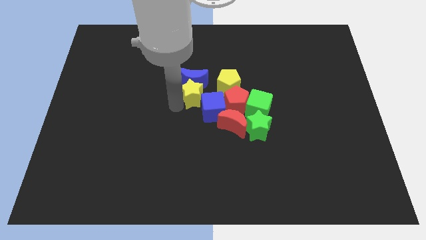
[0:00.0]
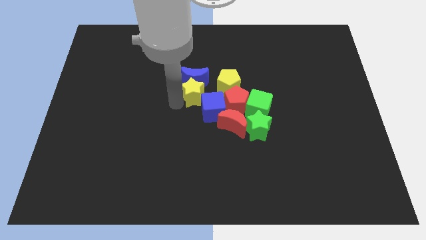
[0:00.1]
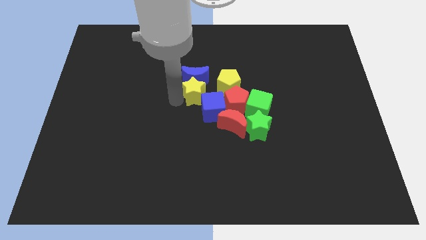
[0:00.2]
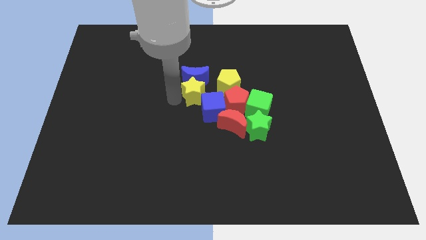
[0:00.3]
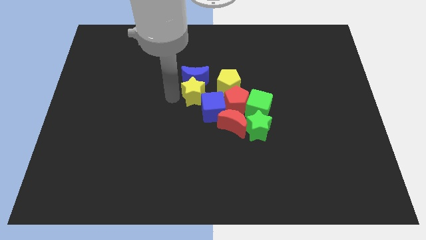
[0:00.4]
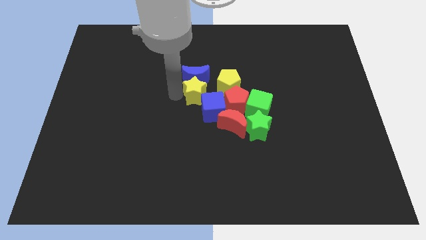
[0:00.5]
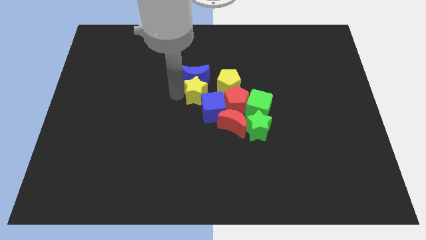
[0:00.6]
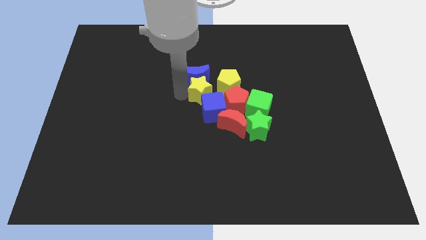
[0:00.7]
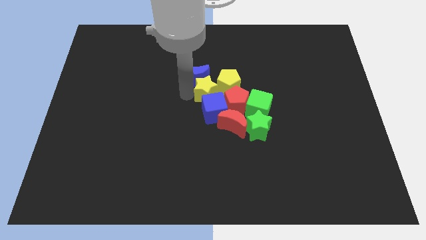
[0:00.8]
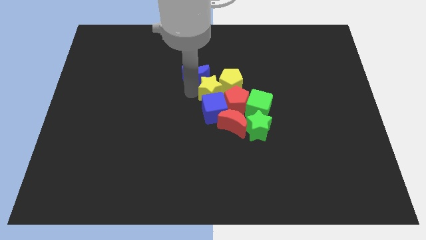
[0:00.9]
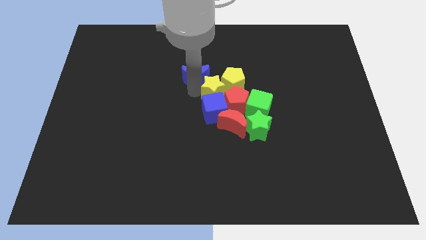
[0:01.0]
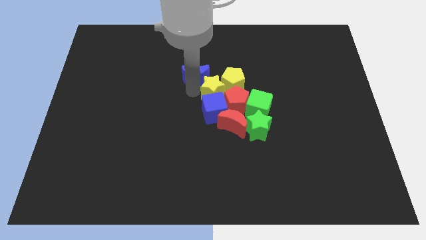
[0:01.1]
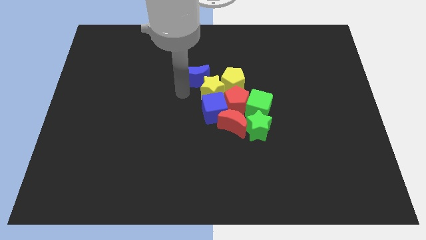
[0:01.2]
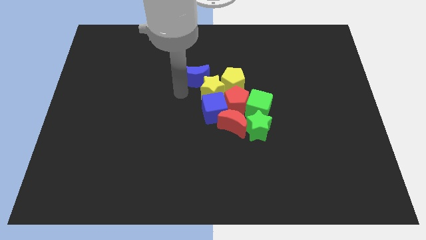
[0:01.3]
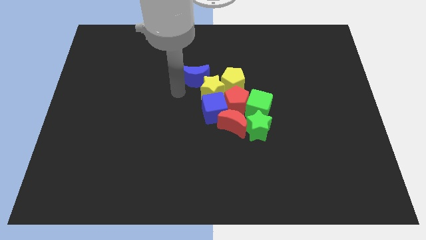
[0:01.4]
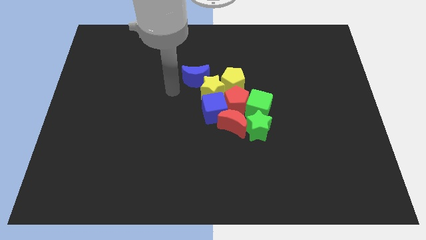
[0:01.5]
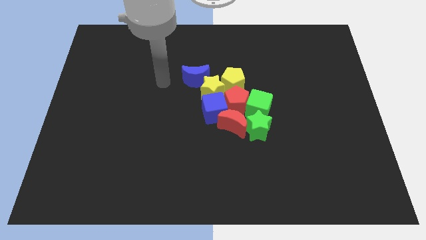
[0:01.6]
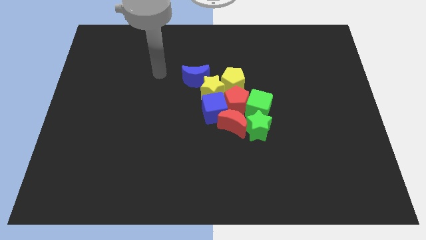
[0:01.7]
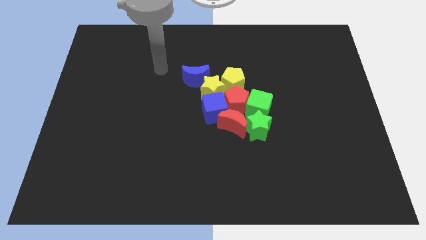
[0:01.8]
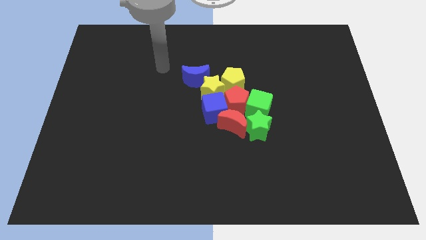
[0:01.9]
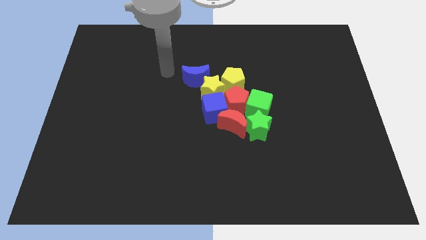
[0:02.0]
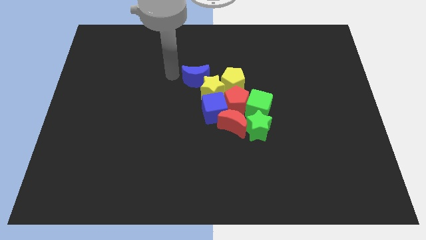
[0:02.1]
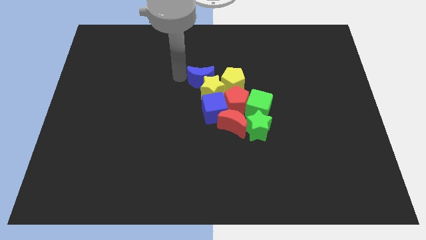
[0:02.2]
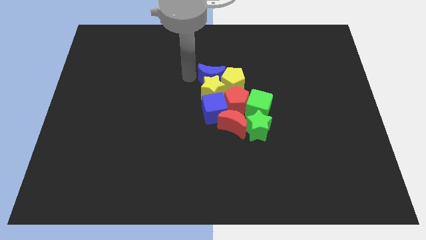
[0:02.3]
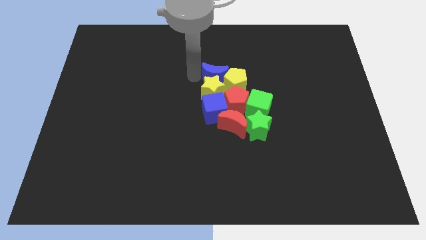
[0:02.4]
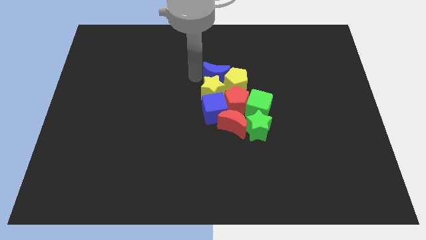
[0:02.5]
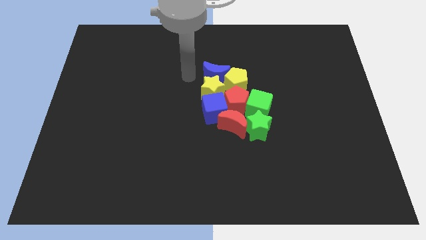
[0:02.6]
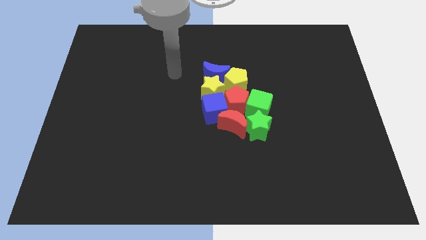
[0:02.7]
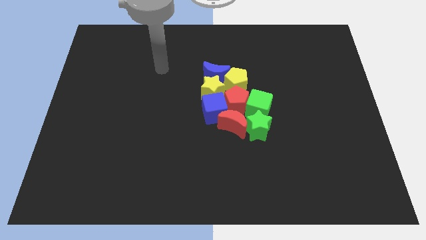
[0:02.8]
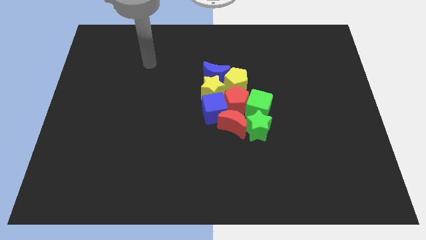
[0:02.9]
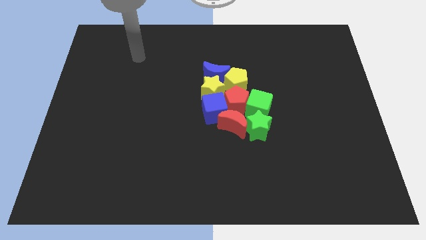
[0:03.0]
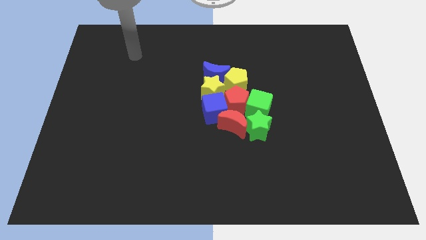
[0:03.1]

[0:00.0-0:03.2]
push the blue moon into the yellow star and yellow pentagon

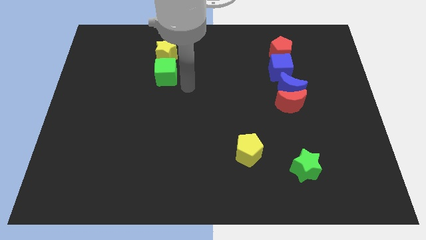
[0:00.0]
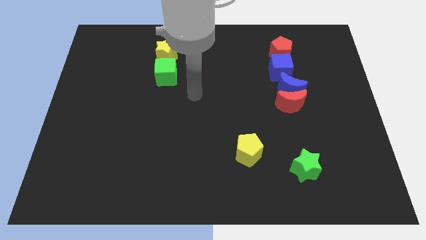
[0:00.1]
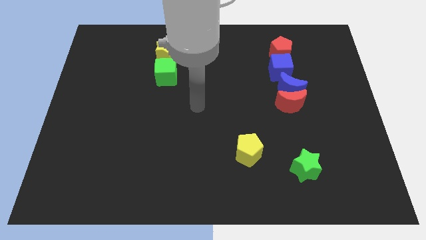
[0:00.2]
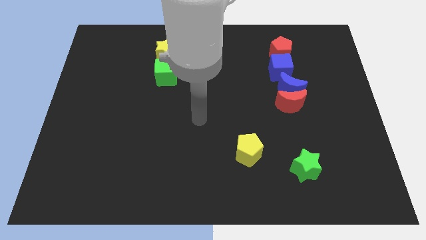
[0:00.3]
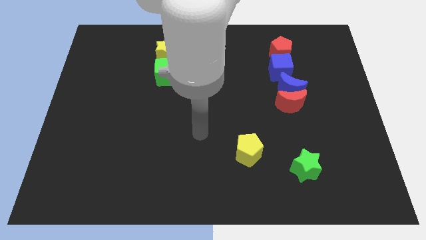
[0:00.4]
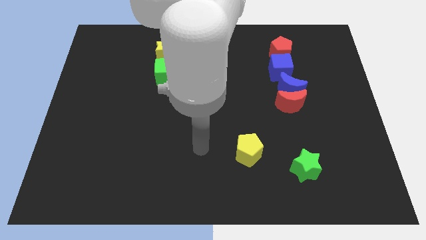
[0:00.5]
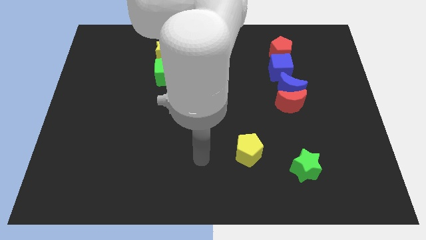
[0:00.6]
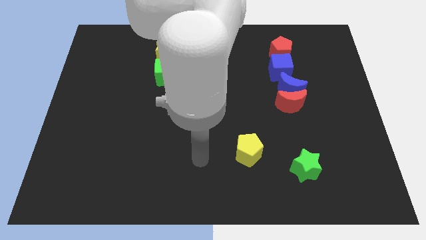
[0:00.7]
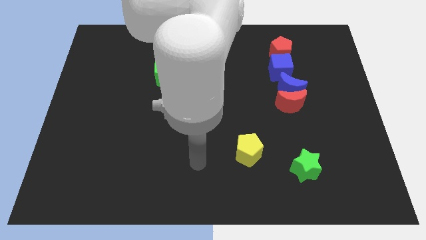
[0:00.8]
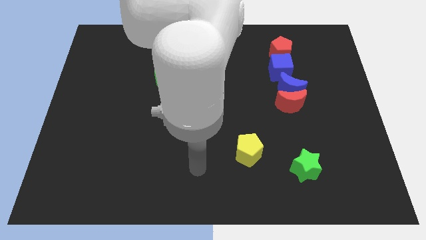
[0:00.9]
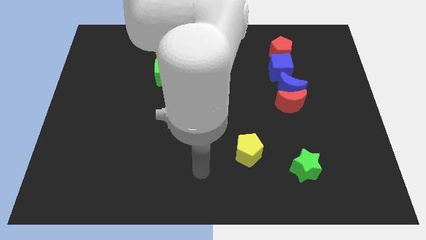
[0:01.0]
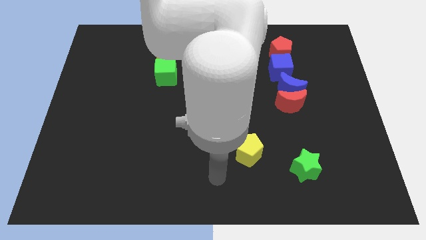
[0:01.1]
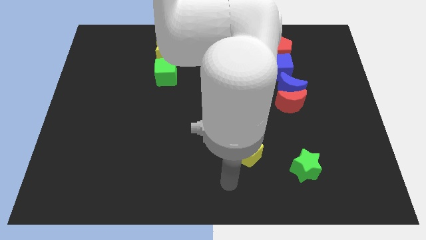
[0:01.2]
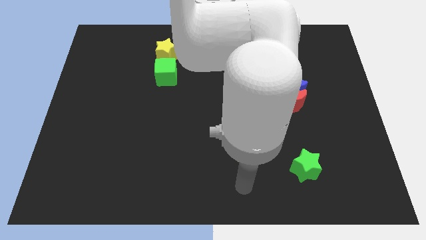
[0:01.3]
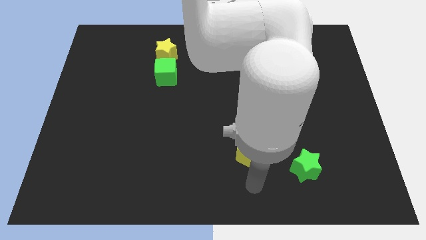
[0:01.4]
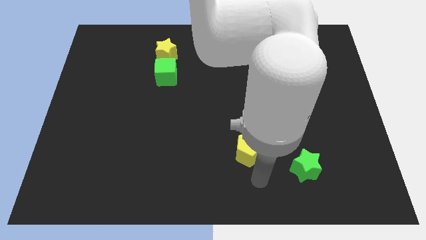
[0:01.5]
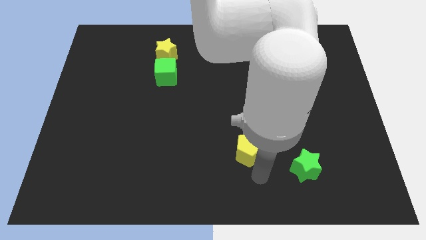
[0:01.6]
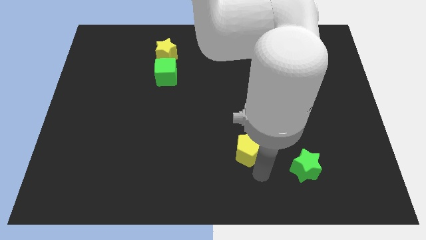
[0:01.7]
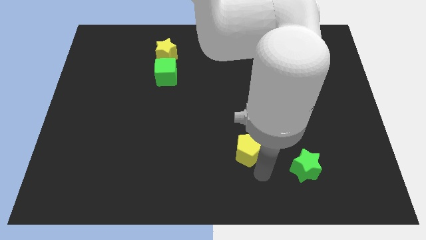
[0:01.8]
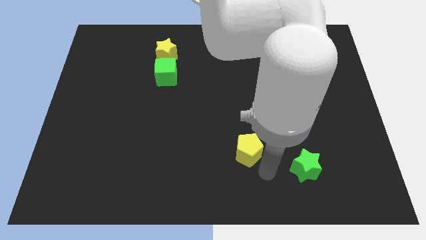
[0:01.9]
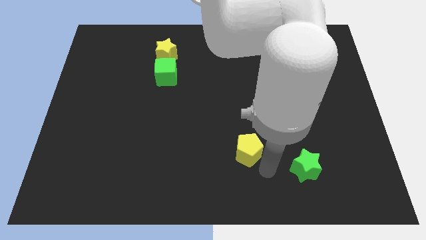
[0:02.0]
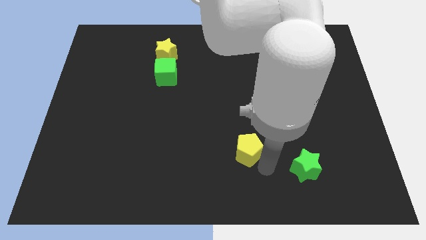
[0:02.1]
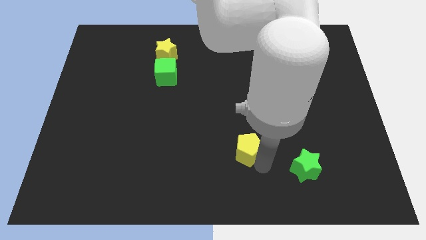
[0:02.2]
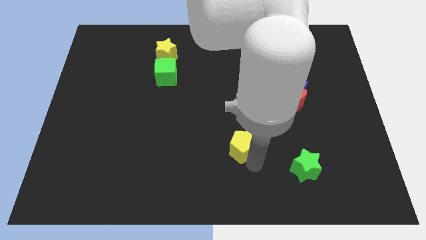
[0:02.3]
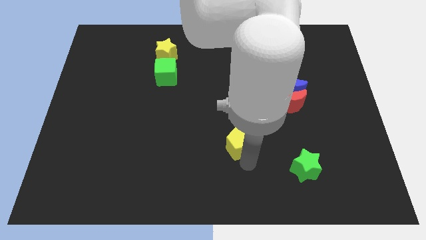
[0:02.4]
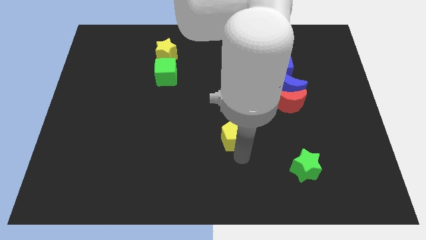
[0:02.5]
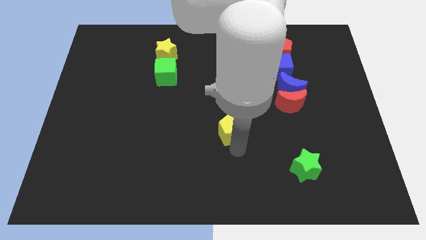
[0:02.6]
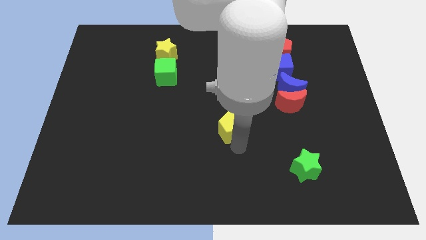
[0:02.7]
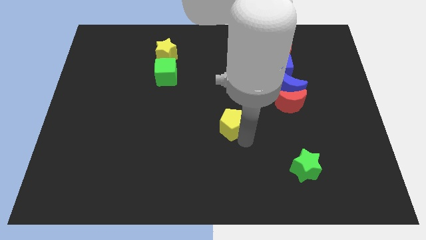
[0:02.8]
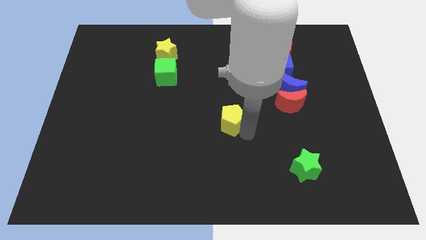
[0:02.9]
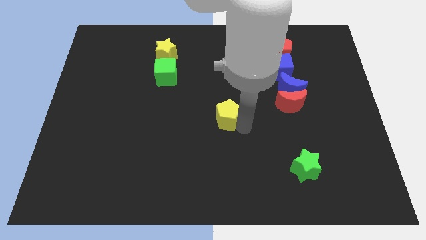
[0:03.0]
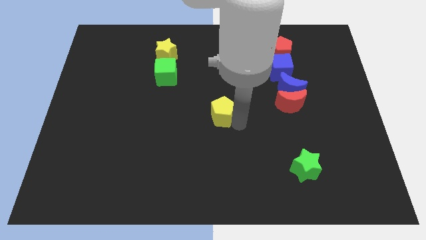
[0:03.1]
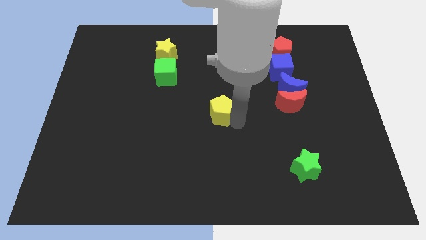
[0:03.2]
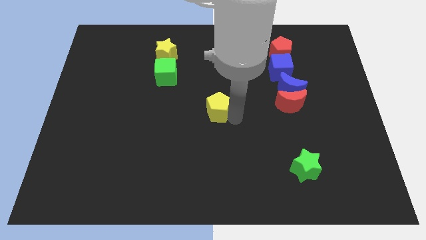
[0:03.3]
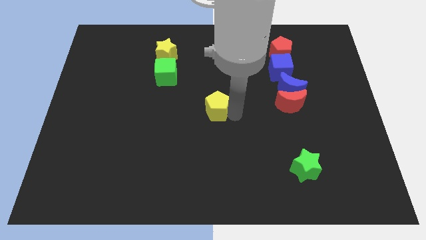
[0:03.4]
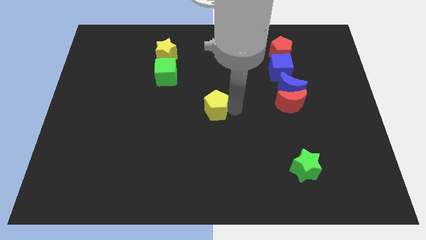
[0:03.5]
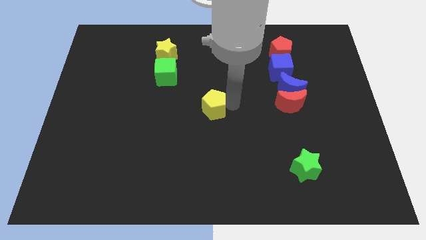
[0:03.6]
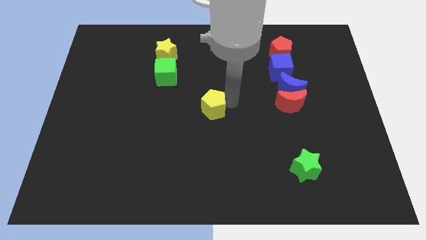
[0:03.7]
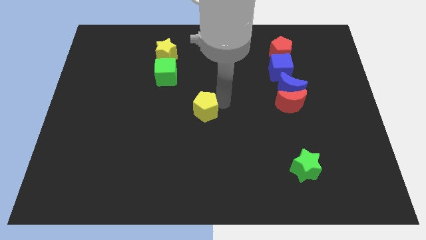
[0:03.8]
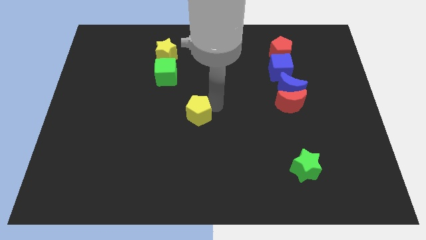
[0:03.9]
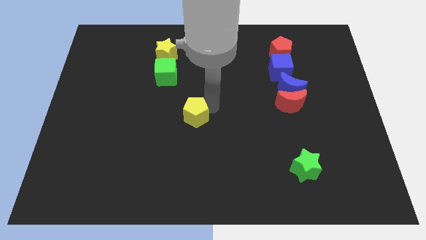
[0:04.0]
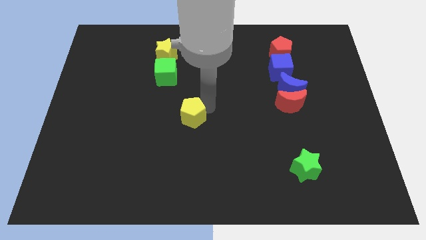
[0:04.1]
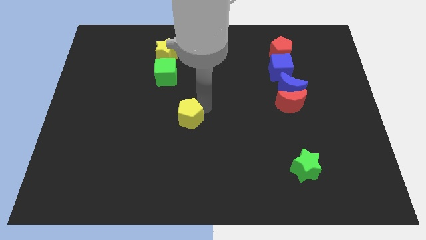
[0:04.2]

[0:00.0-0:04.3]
slide the yellow pentagon diagonally bottom right to the green cube

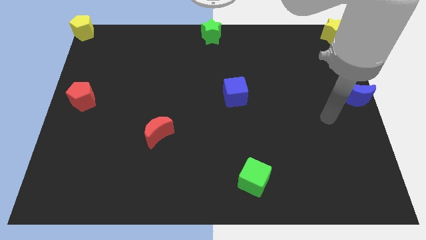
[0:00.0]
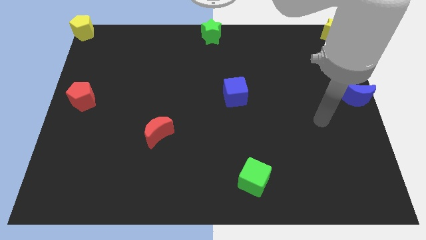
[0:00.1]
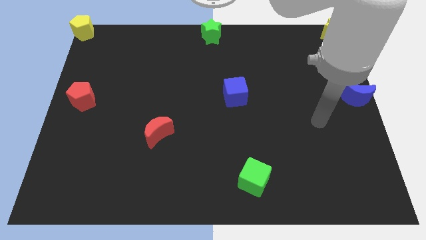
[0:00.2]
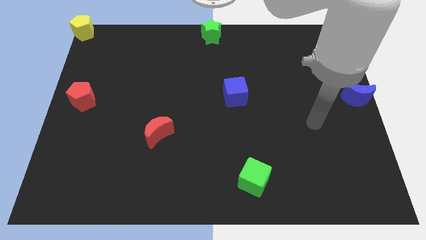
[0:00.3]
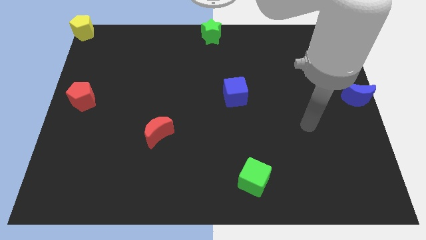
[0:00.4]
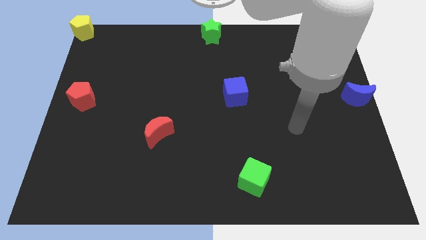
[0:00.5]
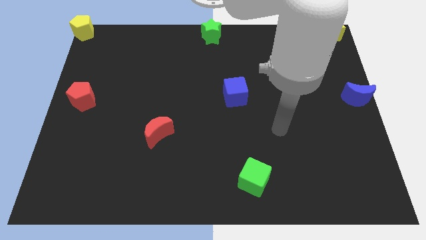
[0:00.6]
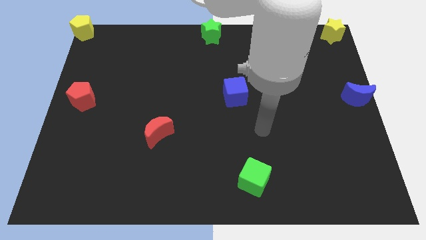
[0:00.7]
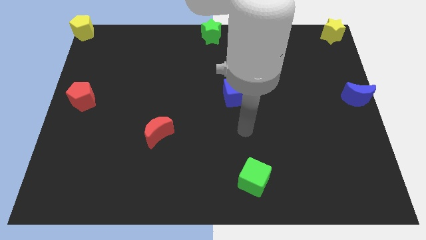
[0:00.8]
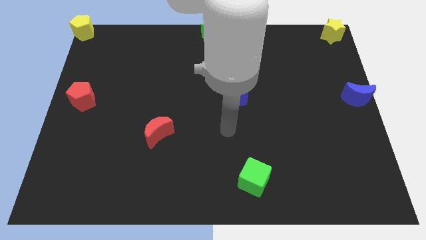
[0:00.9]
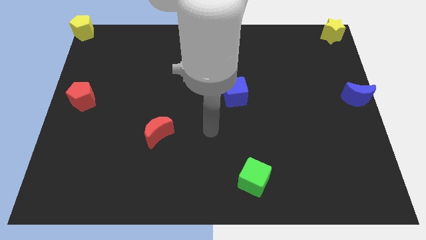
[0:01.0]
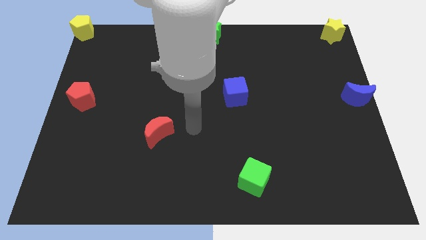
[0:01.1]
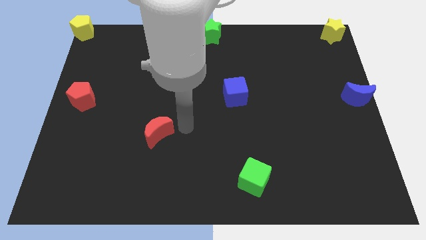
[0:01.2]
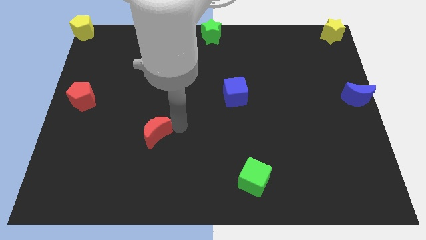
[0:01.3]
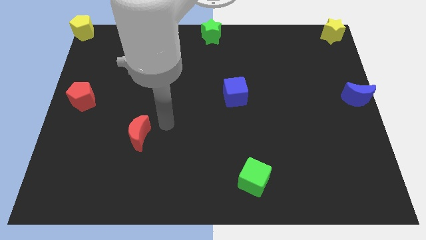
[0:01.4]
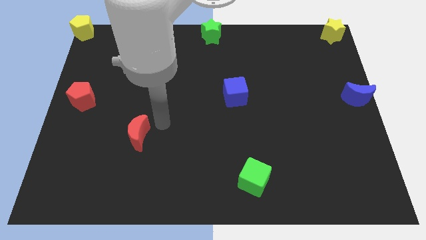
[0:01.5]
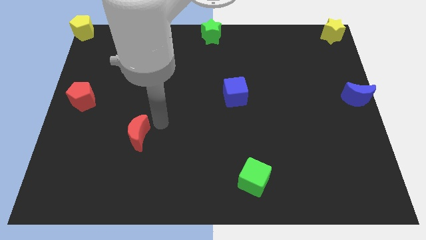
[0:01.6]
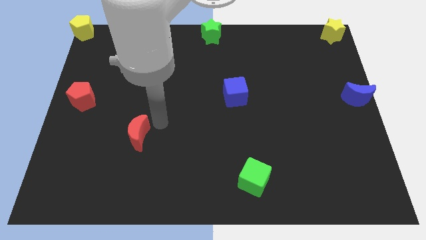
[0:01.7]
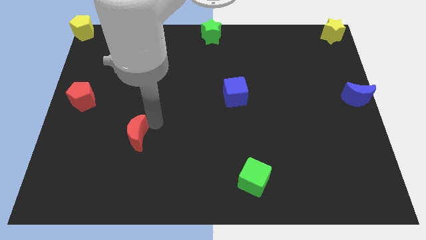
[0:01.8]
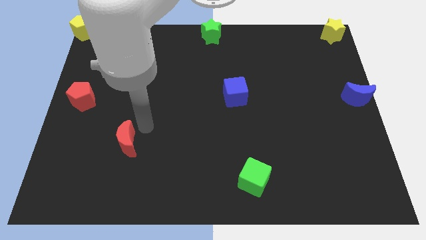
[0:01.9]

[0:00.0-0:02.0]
move the red moon slightly to the left
